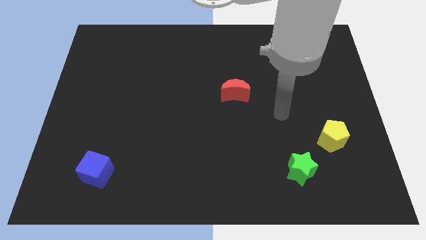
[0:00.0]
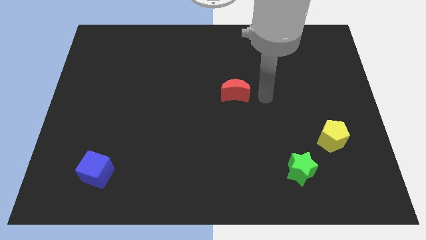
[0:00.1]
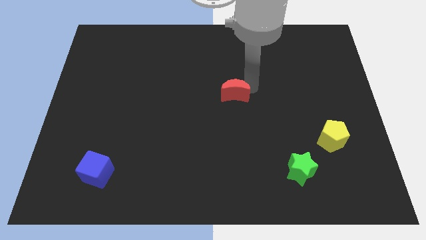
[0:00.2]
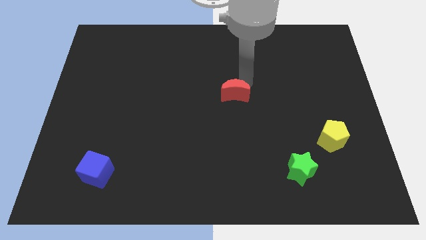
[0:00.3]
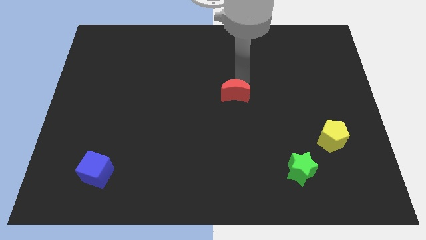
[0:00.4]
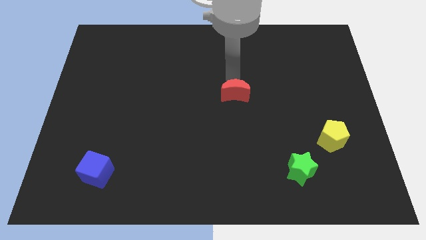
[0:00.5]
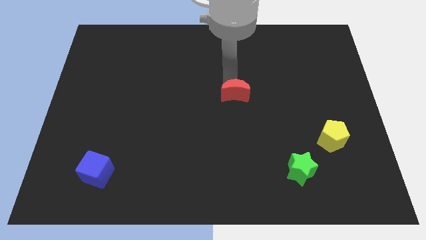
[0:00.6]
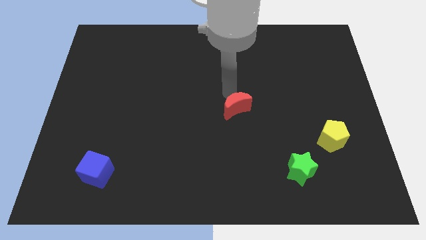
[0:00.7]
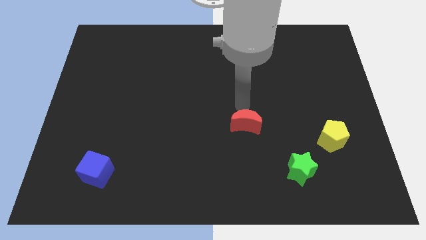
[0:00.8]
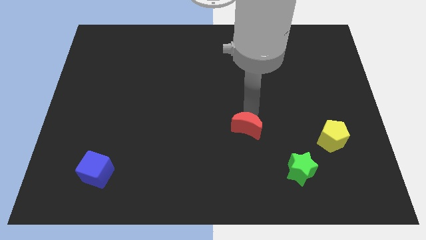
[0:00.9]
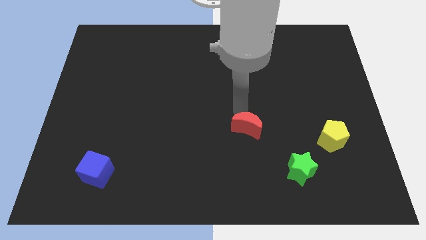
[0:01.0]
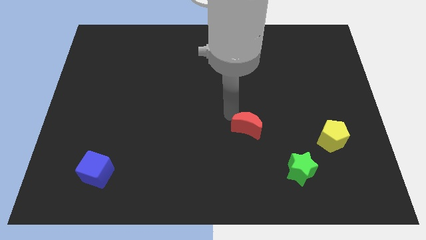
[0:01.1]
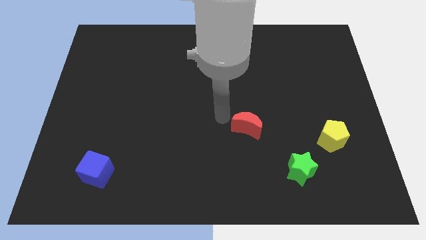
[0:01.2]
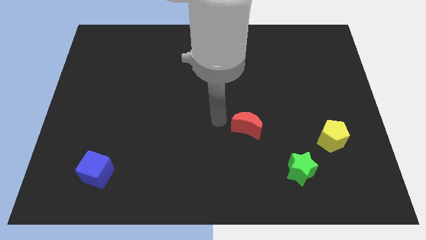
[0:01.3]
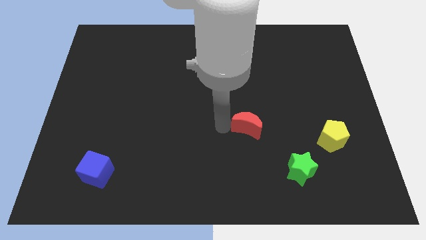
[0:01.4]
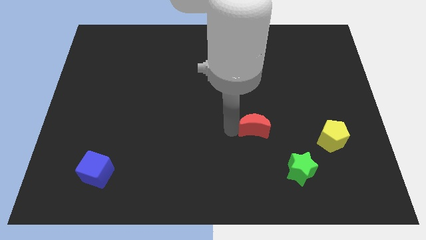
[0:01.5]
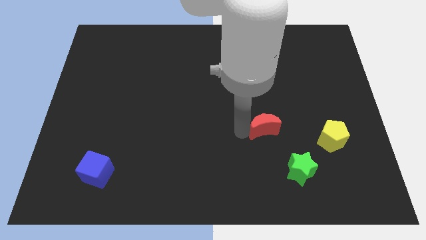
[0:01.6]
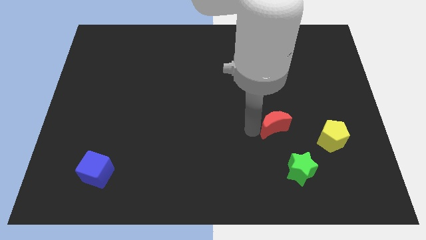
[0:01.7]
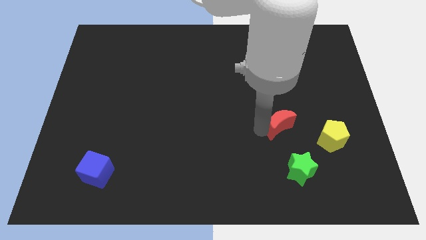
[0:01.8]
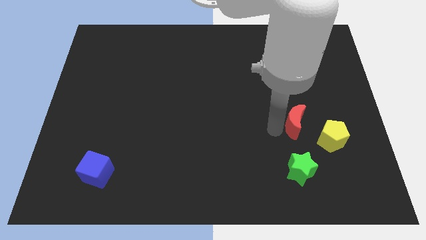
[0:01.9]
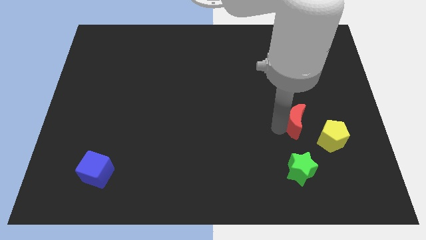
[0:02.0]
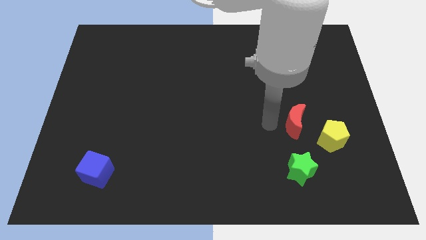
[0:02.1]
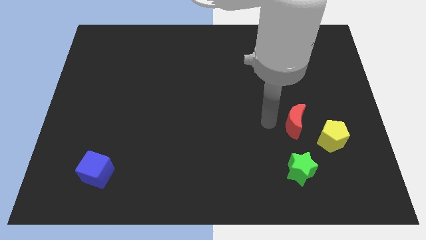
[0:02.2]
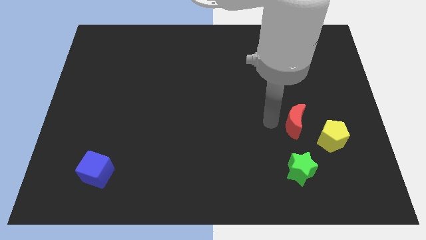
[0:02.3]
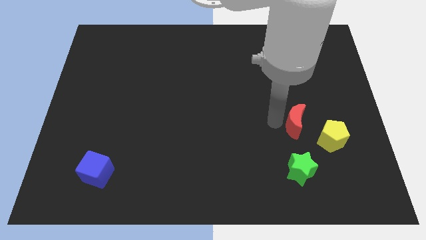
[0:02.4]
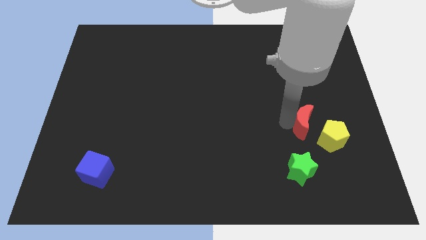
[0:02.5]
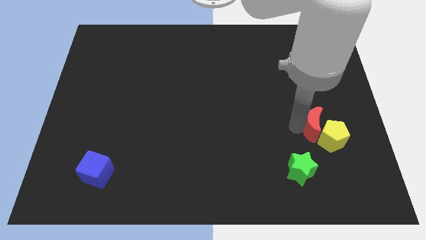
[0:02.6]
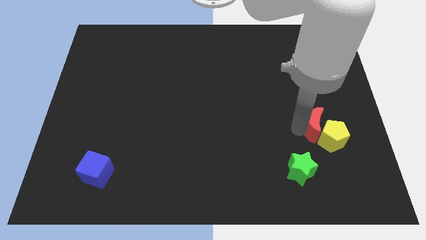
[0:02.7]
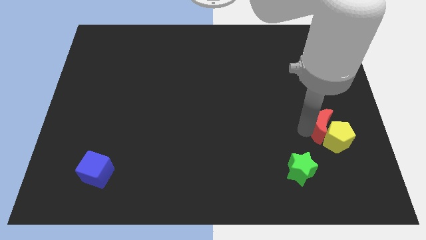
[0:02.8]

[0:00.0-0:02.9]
move the red block towards the yellow pentagon

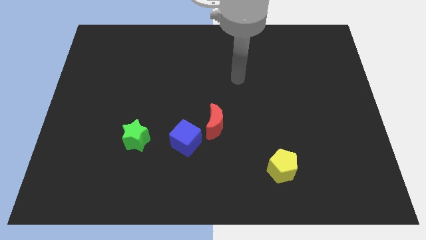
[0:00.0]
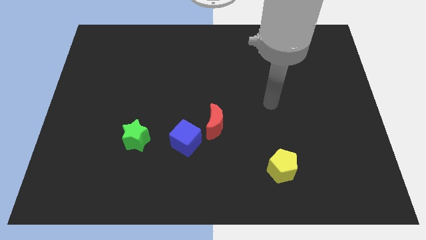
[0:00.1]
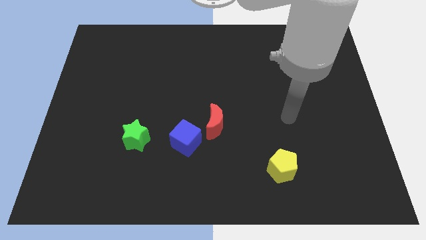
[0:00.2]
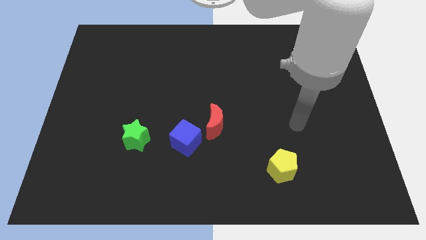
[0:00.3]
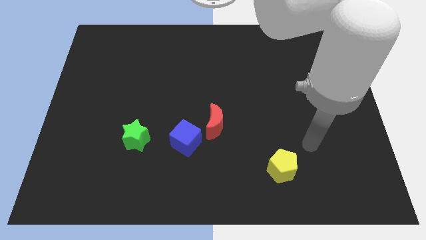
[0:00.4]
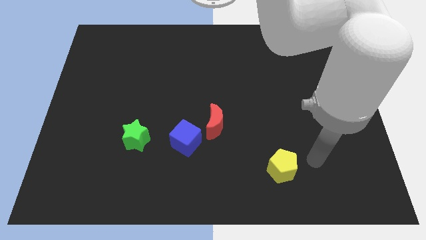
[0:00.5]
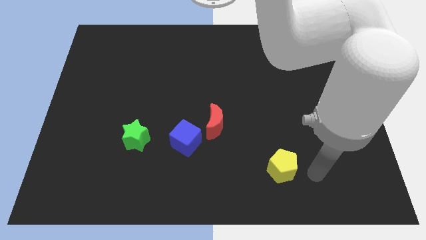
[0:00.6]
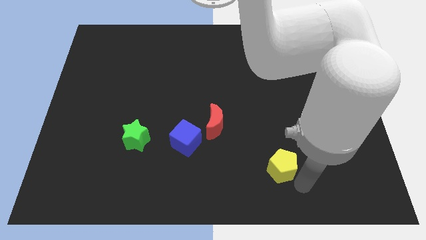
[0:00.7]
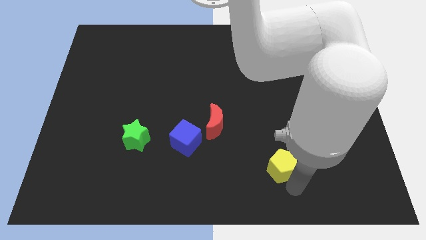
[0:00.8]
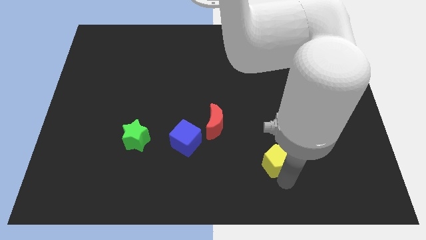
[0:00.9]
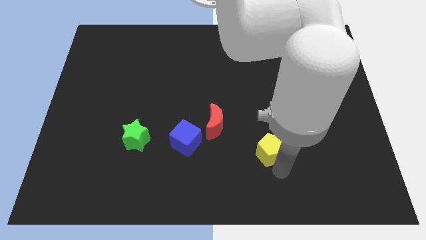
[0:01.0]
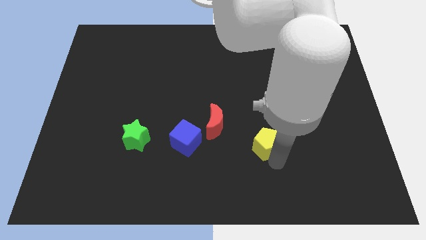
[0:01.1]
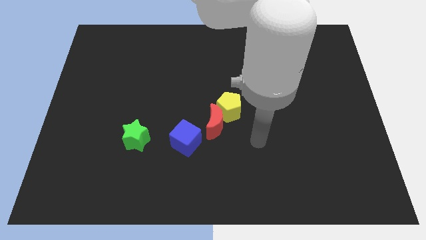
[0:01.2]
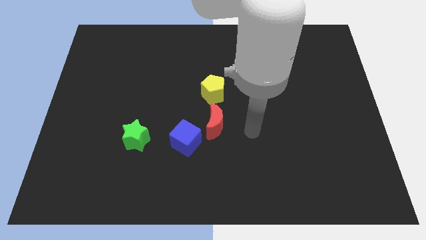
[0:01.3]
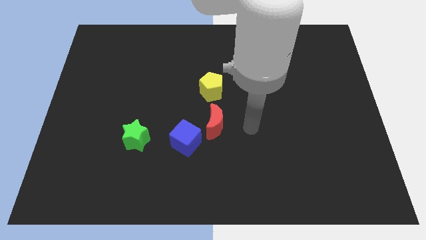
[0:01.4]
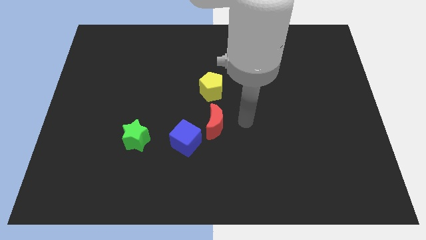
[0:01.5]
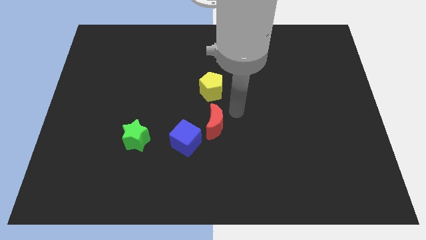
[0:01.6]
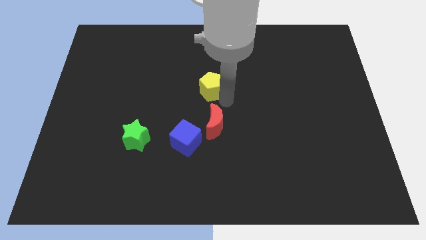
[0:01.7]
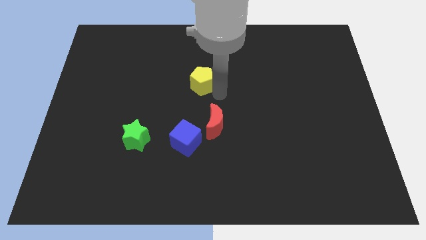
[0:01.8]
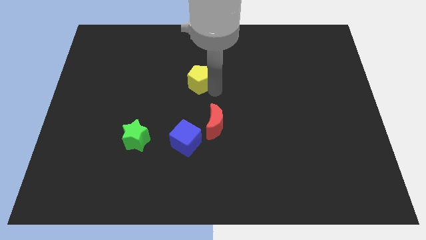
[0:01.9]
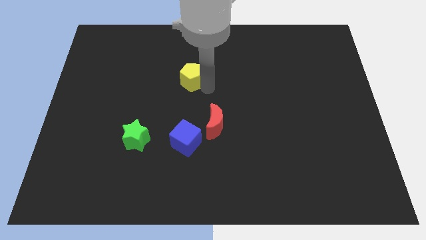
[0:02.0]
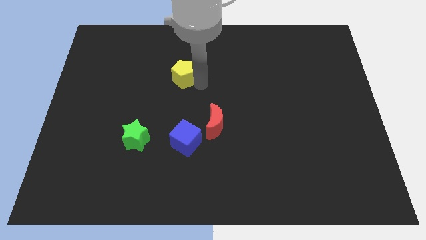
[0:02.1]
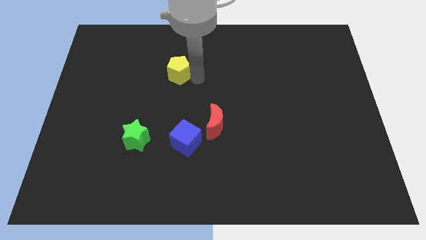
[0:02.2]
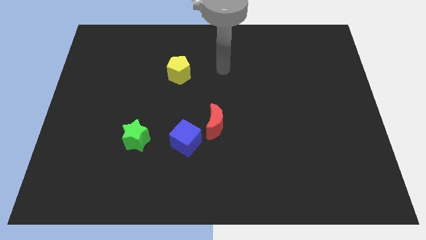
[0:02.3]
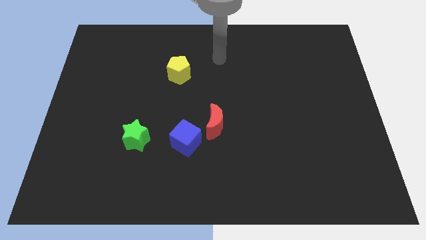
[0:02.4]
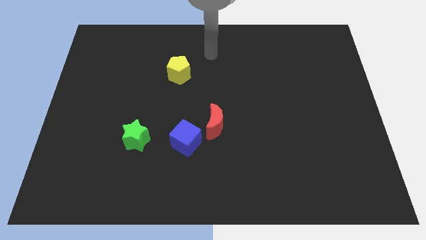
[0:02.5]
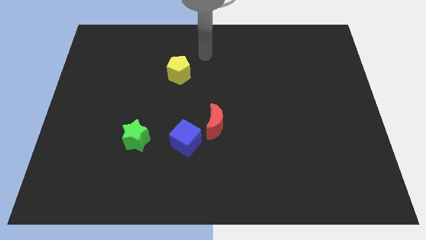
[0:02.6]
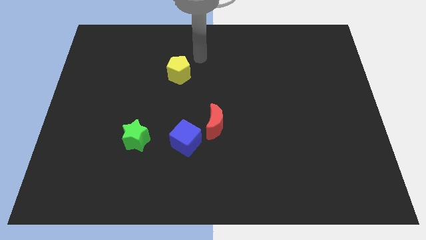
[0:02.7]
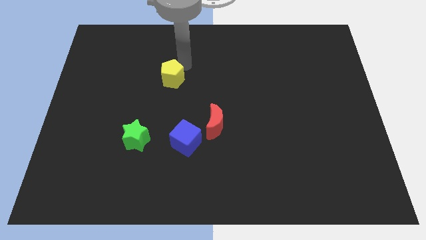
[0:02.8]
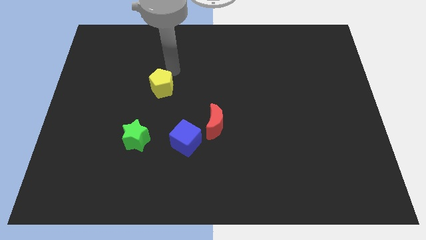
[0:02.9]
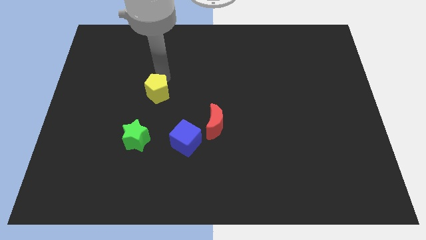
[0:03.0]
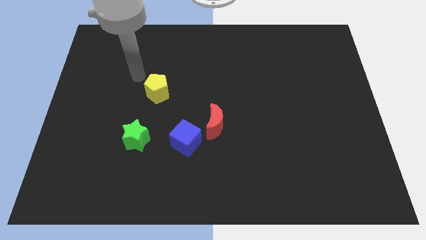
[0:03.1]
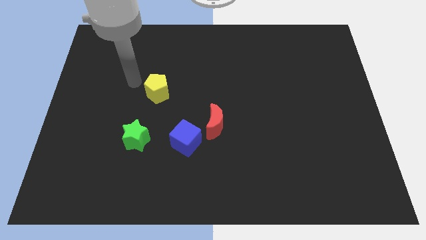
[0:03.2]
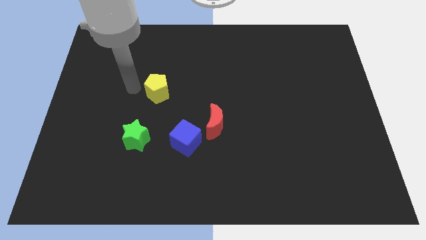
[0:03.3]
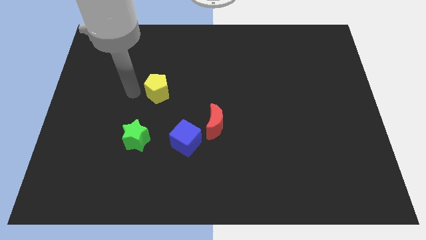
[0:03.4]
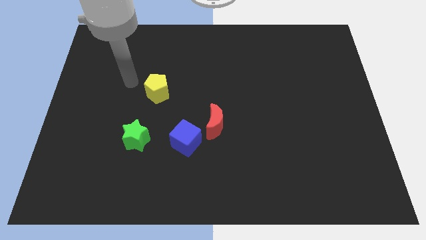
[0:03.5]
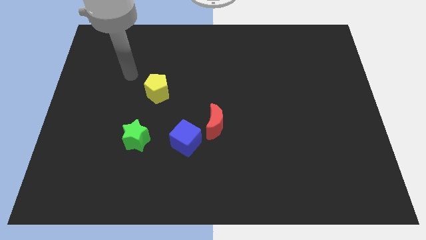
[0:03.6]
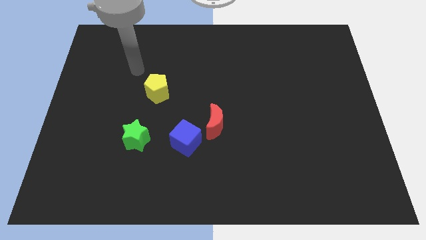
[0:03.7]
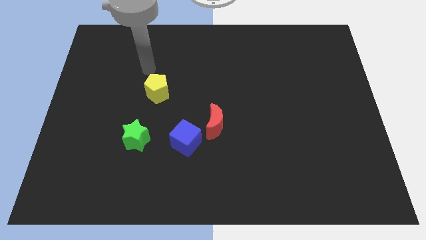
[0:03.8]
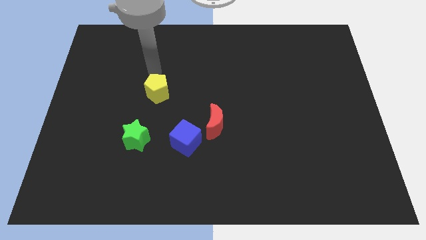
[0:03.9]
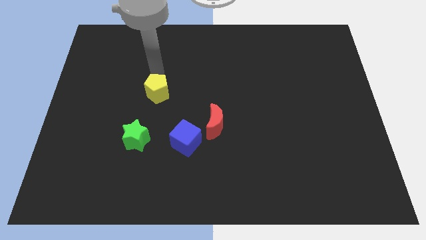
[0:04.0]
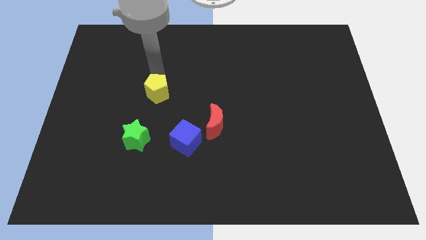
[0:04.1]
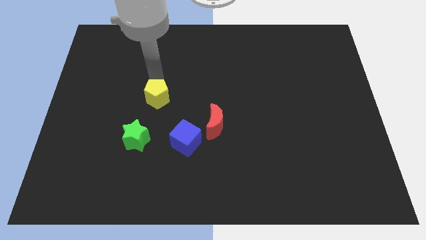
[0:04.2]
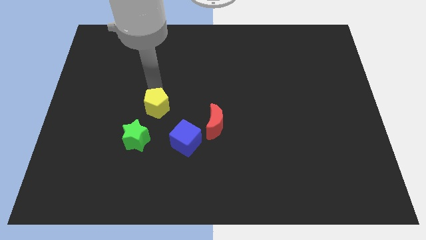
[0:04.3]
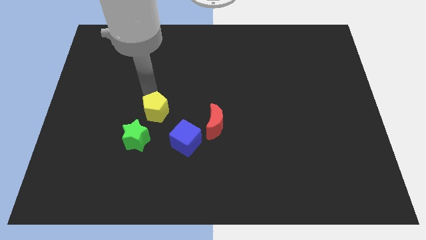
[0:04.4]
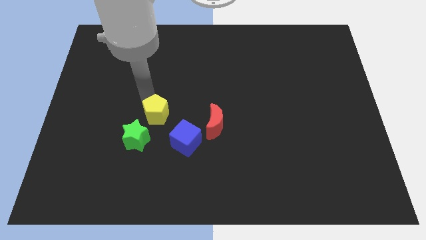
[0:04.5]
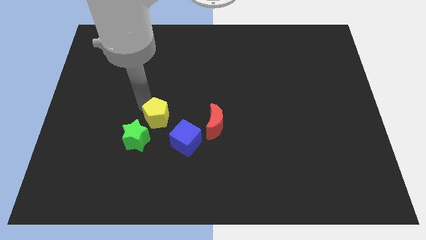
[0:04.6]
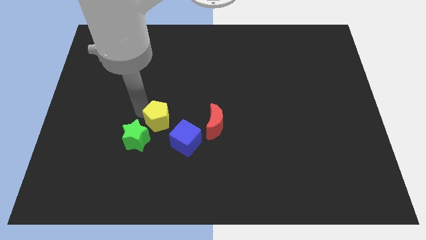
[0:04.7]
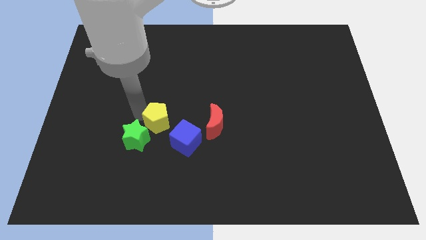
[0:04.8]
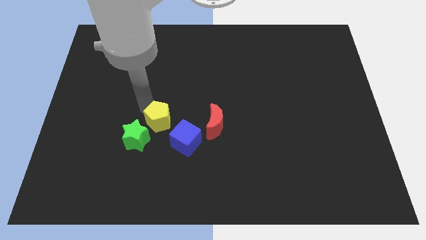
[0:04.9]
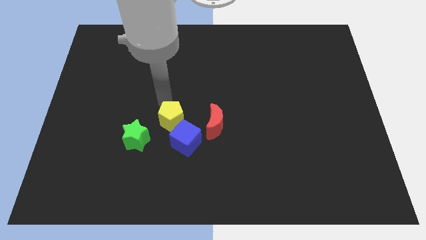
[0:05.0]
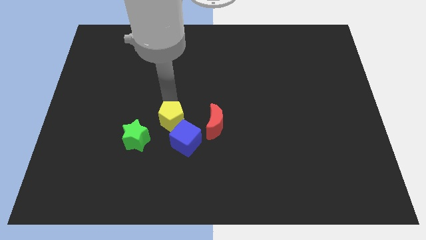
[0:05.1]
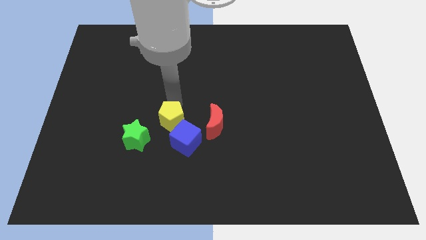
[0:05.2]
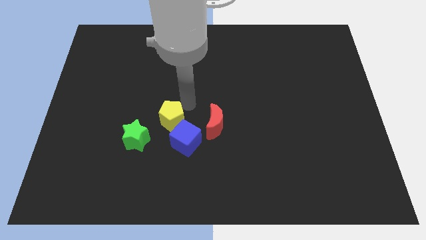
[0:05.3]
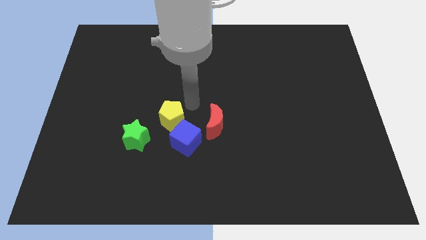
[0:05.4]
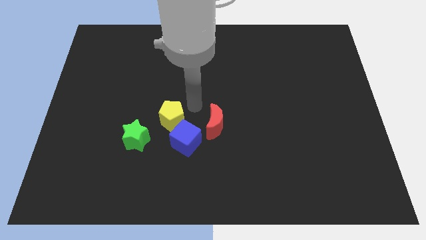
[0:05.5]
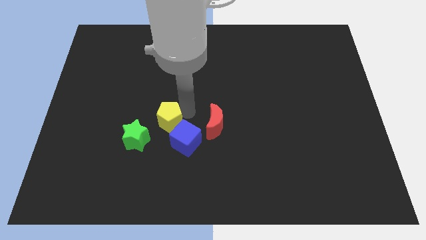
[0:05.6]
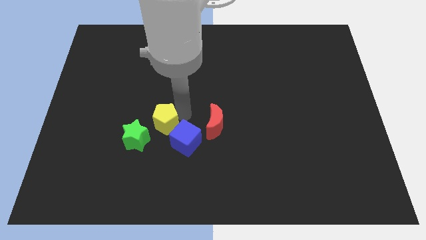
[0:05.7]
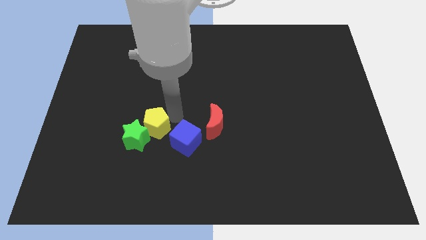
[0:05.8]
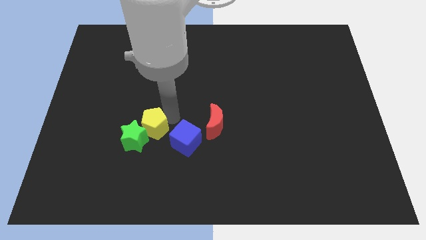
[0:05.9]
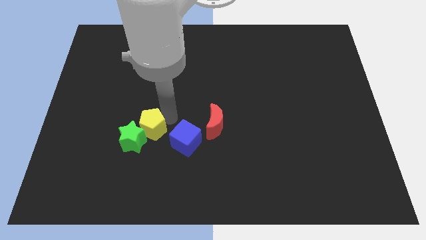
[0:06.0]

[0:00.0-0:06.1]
push the pentagon to the green block
